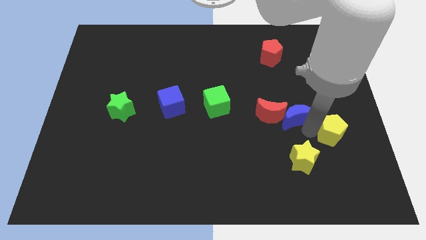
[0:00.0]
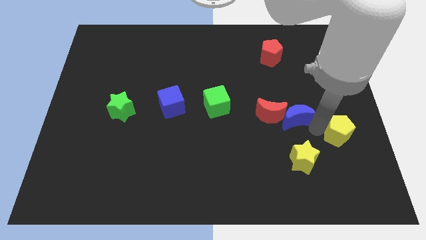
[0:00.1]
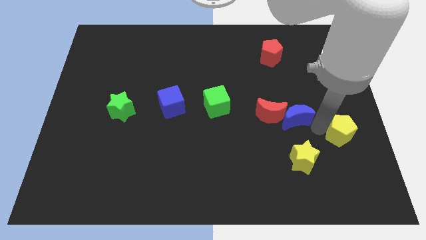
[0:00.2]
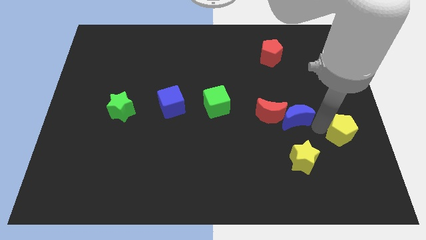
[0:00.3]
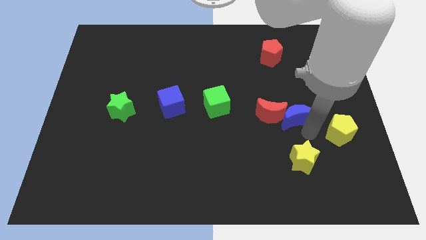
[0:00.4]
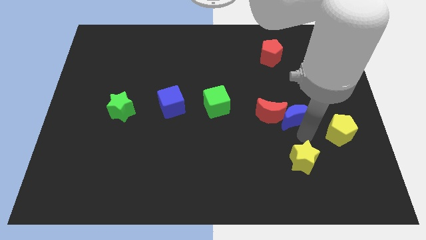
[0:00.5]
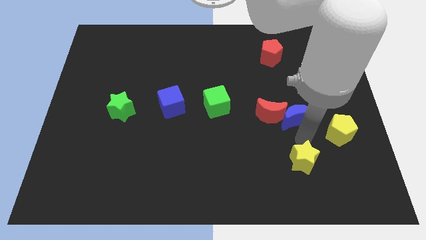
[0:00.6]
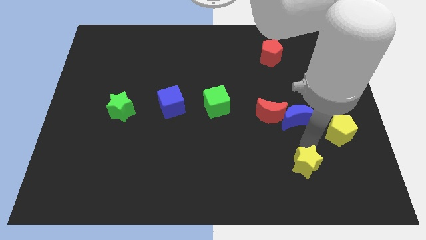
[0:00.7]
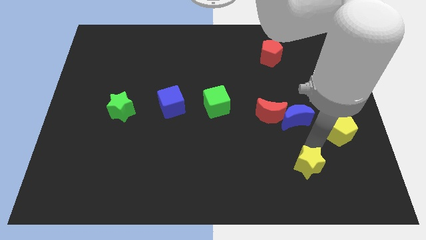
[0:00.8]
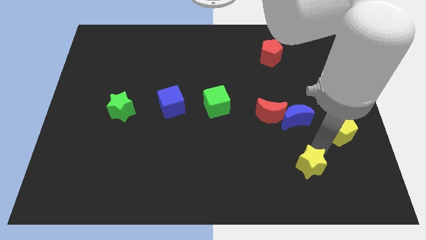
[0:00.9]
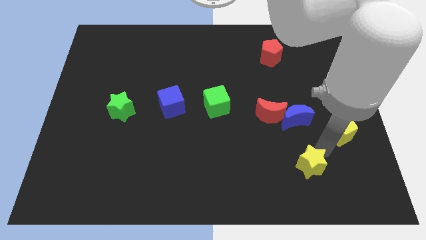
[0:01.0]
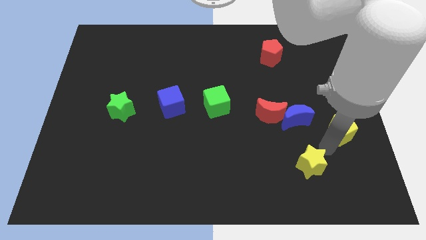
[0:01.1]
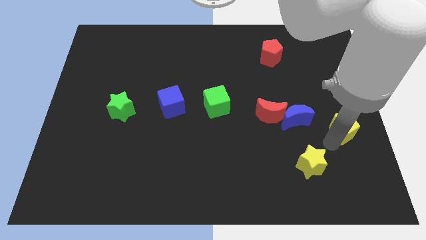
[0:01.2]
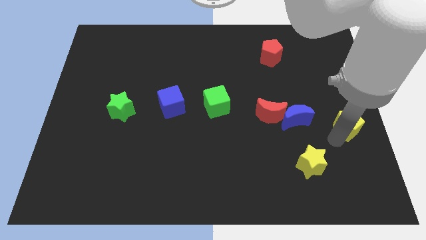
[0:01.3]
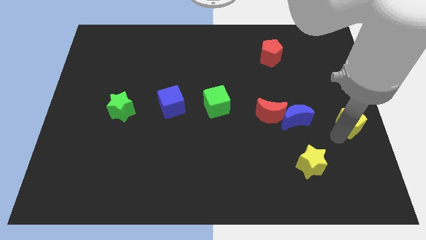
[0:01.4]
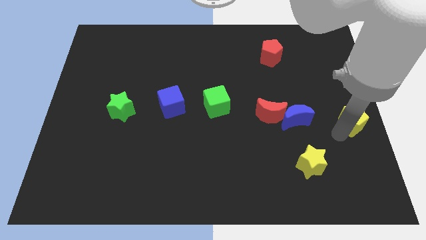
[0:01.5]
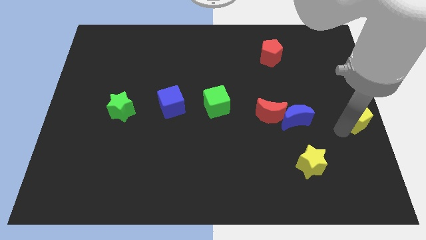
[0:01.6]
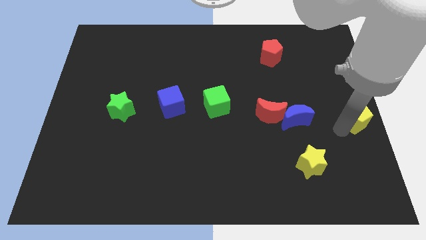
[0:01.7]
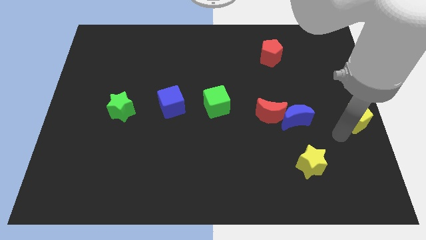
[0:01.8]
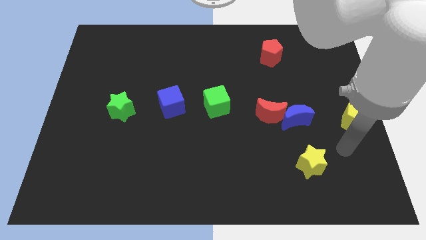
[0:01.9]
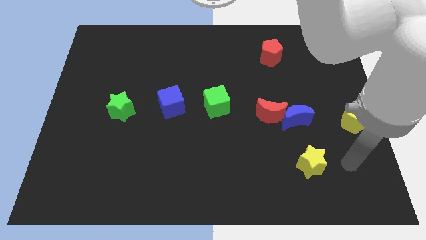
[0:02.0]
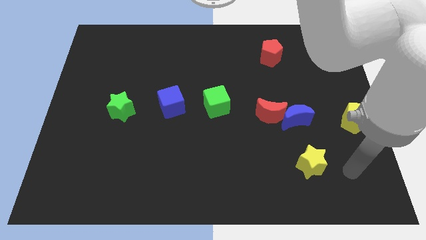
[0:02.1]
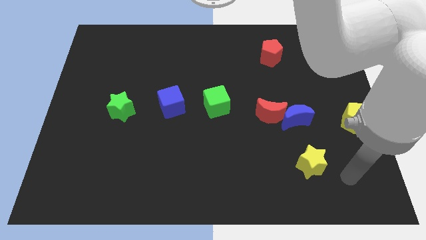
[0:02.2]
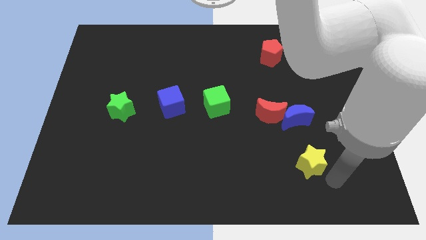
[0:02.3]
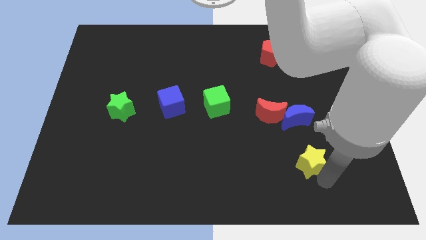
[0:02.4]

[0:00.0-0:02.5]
separate the yellow pentagon from a group of block

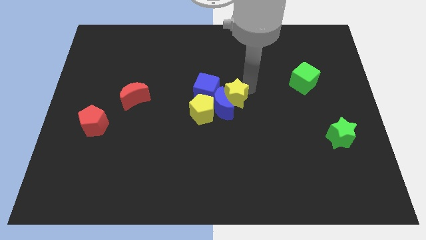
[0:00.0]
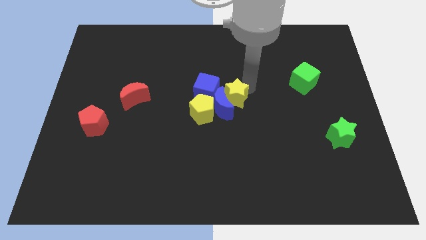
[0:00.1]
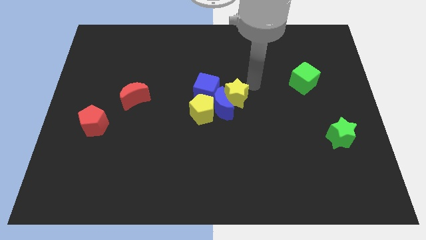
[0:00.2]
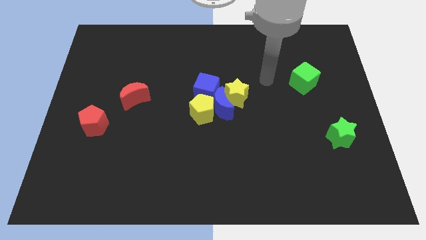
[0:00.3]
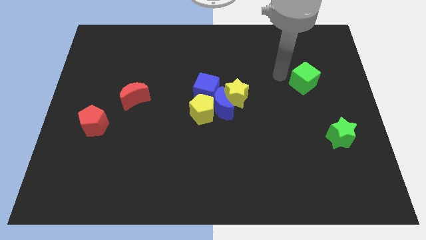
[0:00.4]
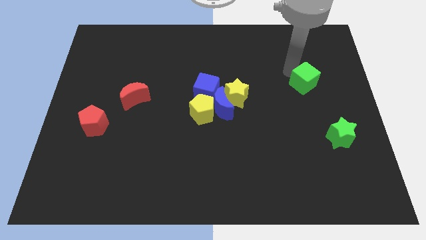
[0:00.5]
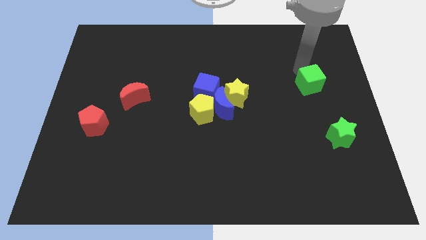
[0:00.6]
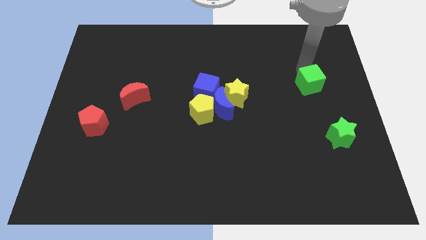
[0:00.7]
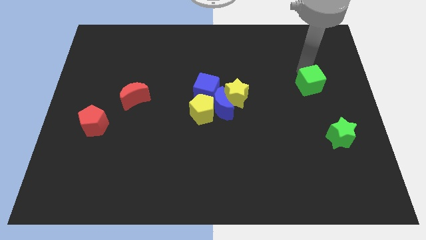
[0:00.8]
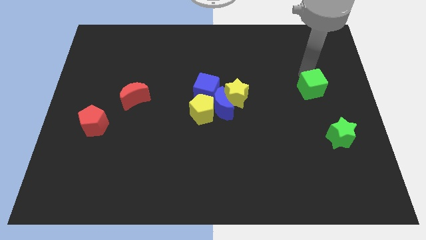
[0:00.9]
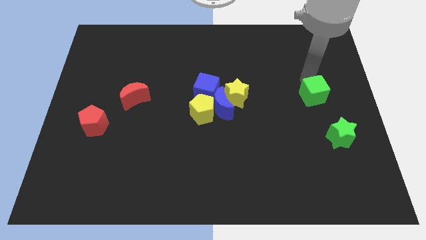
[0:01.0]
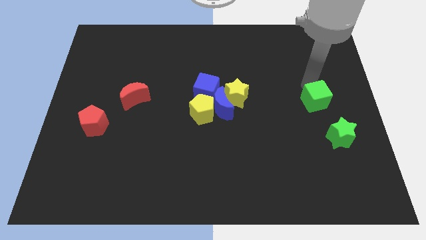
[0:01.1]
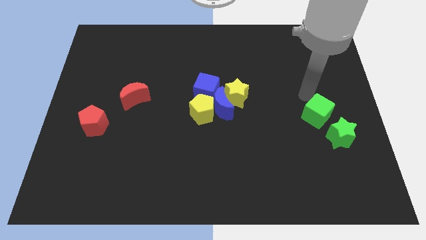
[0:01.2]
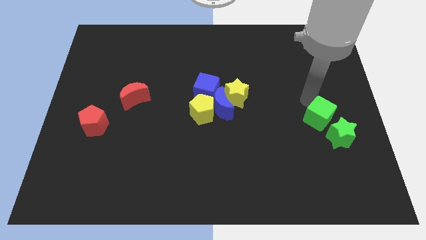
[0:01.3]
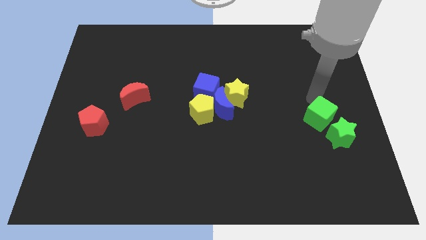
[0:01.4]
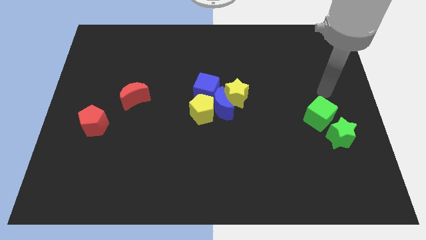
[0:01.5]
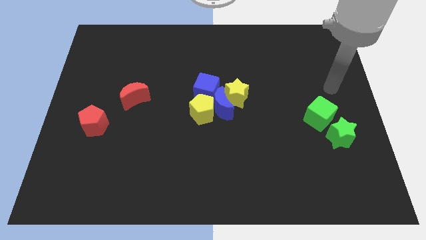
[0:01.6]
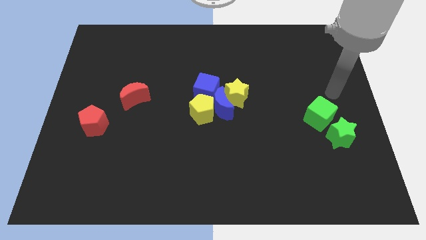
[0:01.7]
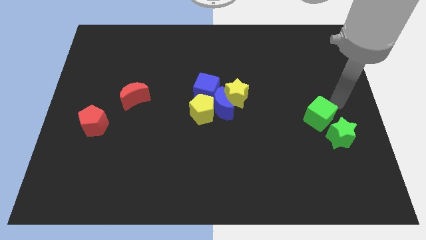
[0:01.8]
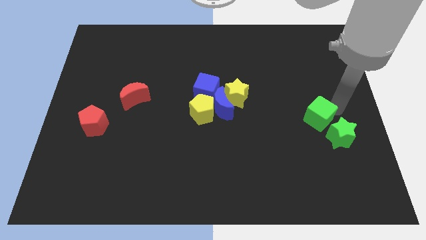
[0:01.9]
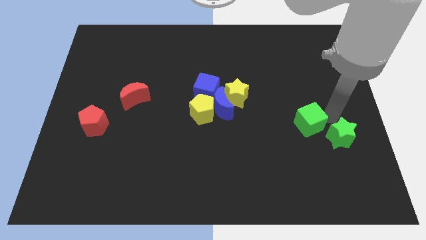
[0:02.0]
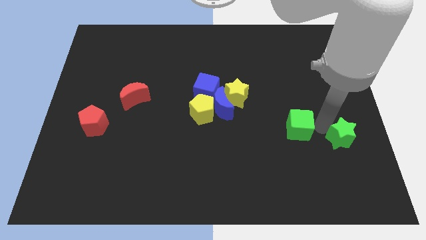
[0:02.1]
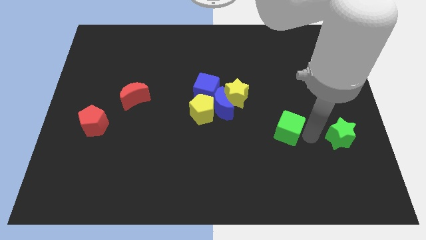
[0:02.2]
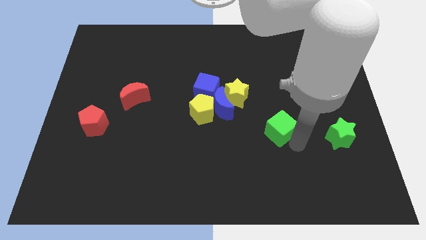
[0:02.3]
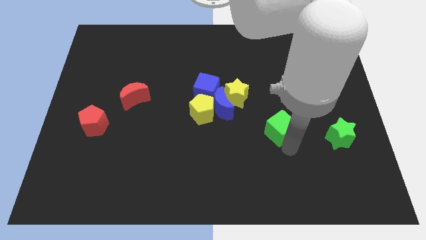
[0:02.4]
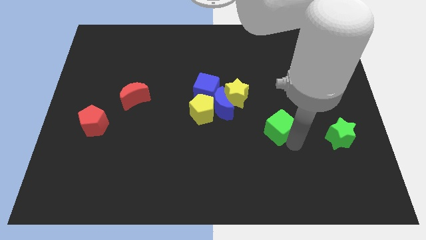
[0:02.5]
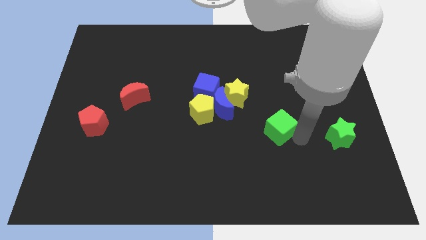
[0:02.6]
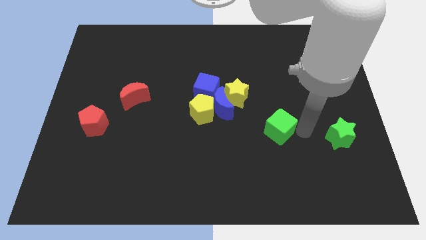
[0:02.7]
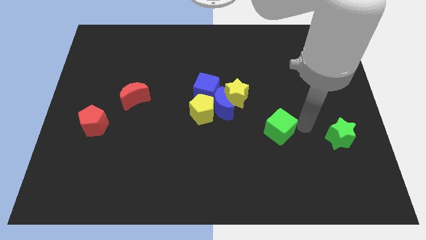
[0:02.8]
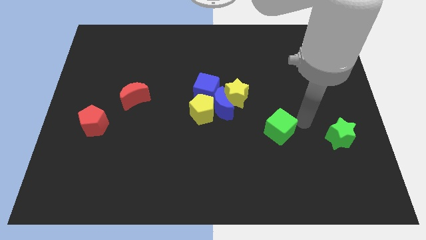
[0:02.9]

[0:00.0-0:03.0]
move the green cube parallel to the left side of the green star

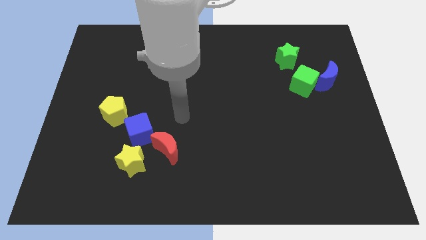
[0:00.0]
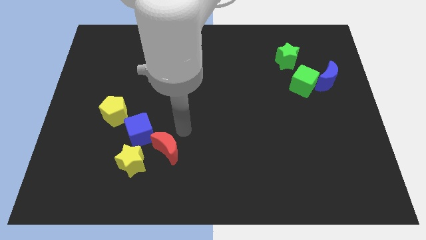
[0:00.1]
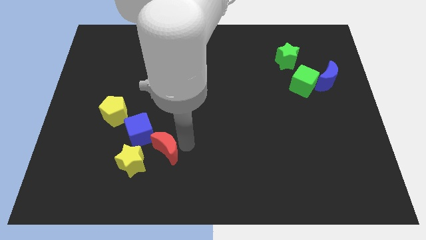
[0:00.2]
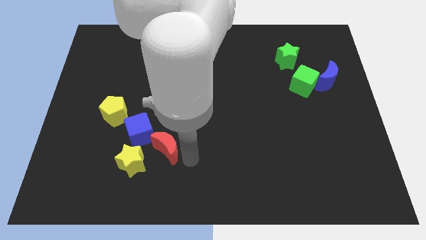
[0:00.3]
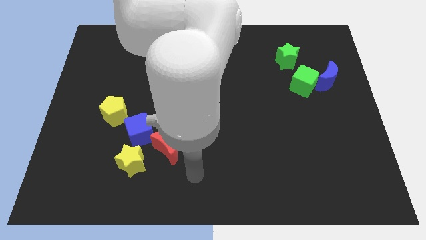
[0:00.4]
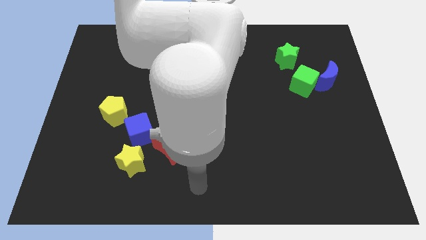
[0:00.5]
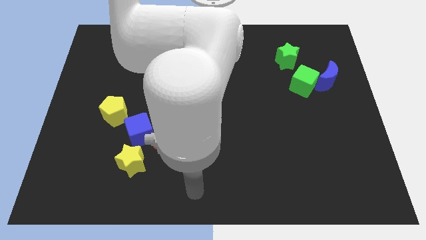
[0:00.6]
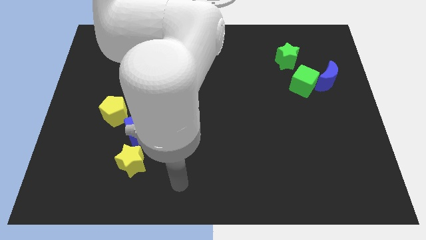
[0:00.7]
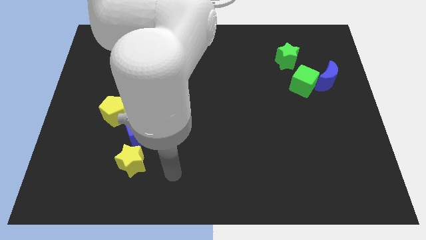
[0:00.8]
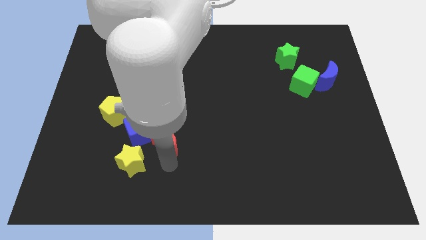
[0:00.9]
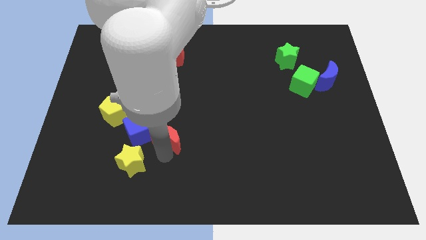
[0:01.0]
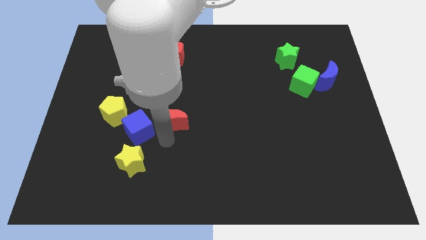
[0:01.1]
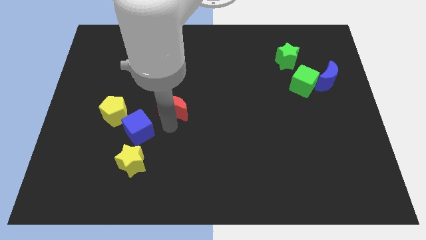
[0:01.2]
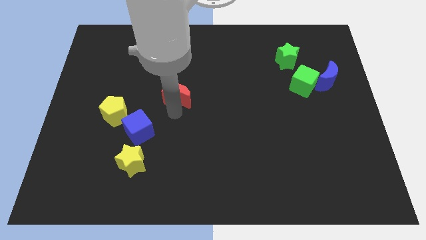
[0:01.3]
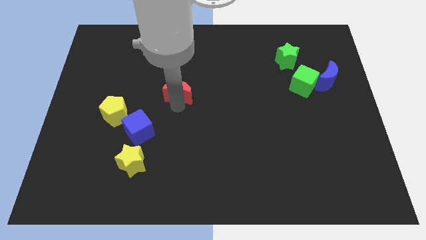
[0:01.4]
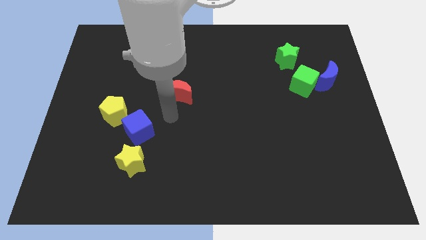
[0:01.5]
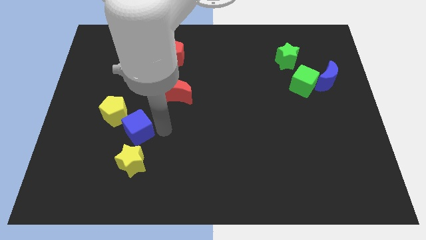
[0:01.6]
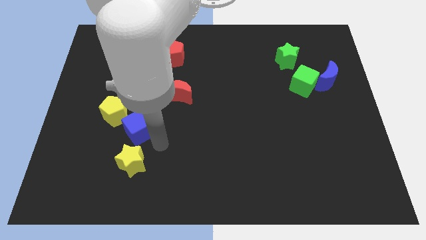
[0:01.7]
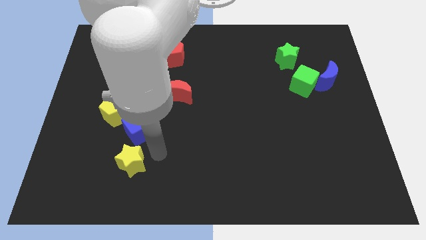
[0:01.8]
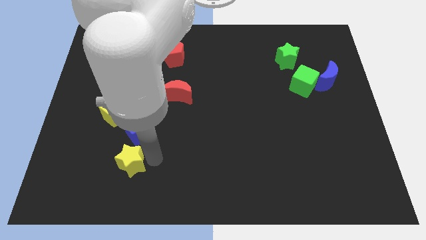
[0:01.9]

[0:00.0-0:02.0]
put the red moon below the red pentagon

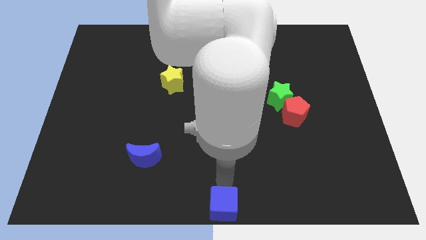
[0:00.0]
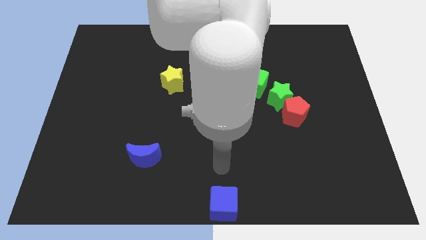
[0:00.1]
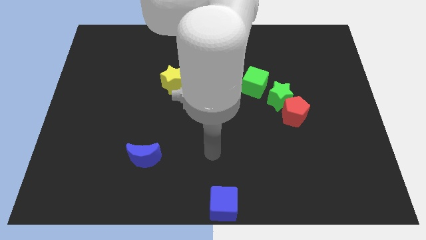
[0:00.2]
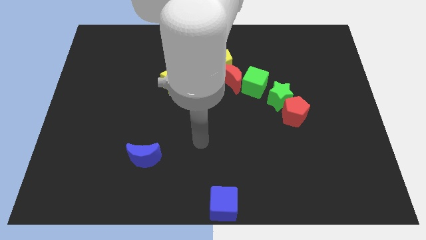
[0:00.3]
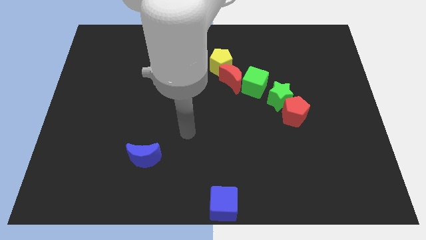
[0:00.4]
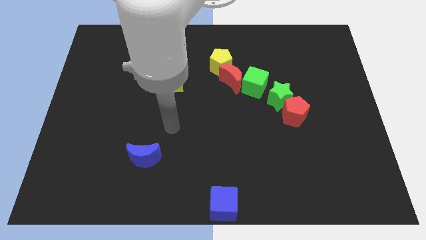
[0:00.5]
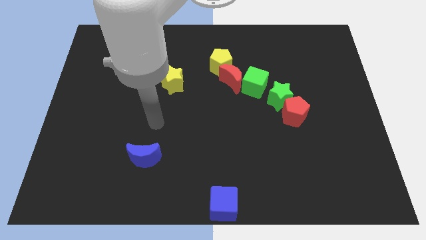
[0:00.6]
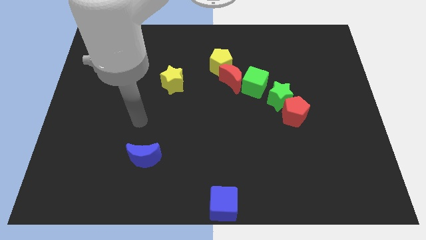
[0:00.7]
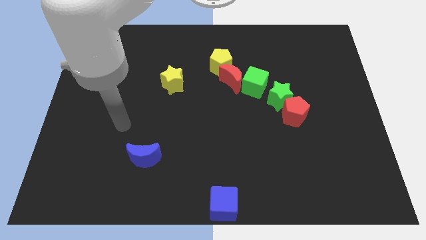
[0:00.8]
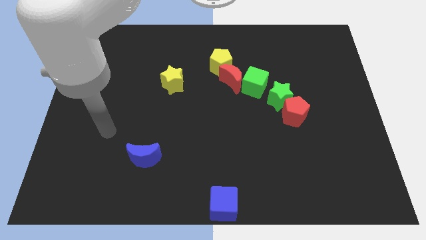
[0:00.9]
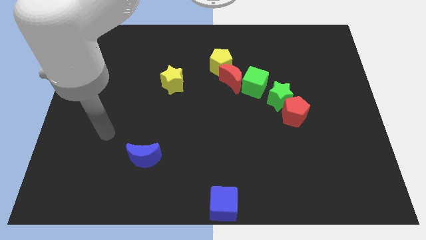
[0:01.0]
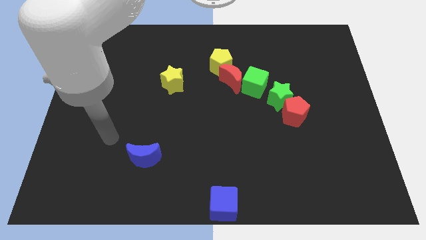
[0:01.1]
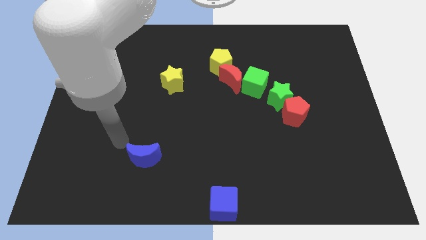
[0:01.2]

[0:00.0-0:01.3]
take your arm away from the blue cube

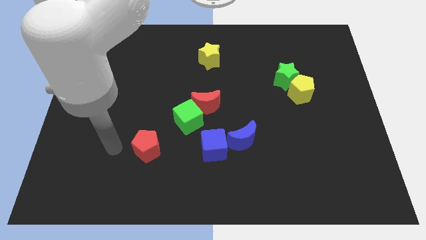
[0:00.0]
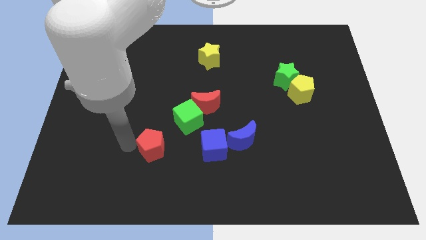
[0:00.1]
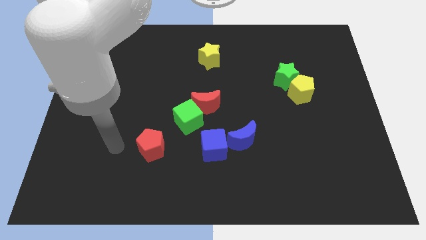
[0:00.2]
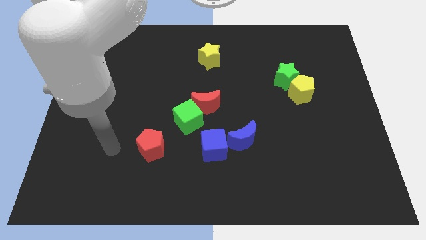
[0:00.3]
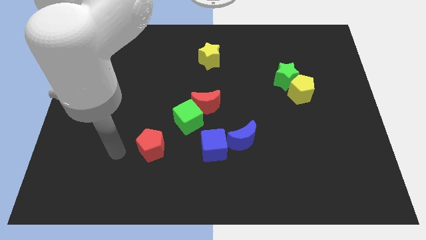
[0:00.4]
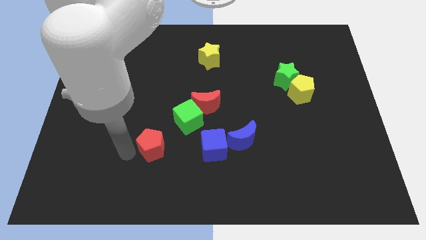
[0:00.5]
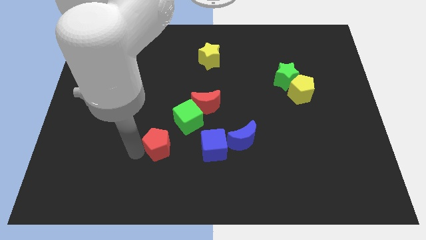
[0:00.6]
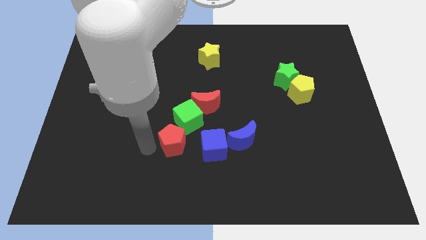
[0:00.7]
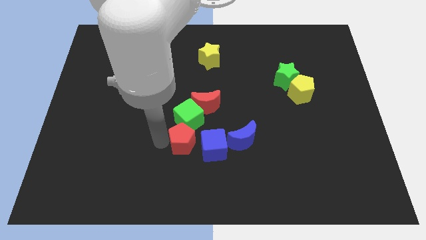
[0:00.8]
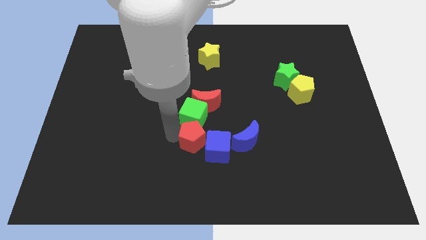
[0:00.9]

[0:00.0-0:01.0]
move red pentagon to the bottom of green cube
